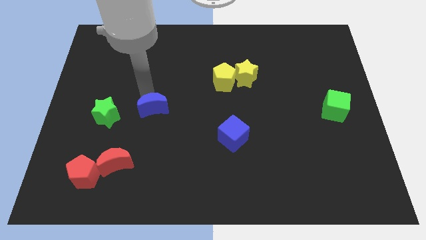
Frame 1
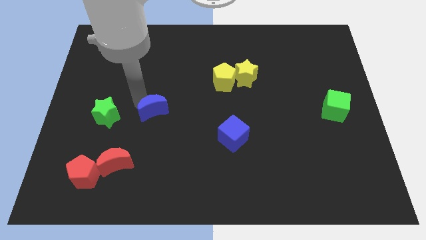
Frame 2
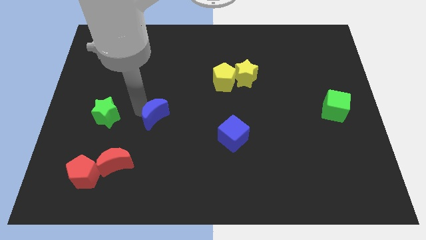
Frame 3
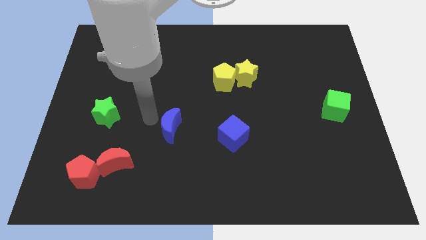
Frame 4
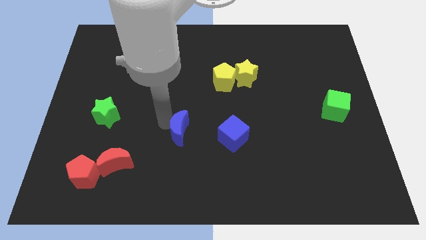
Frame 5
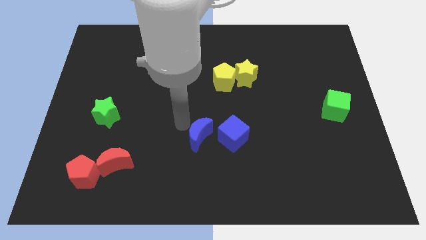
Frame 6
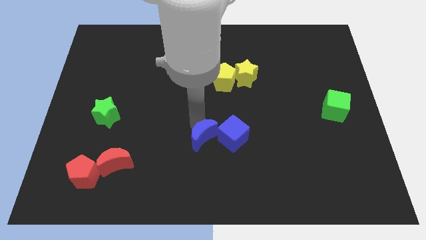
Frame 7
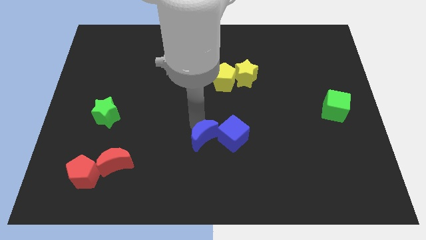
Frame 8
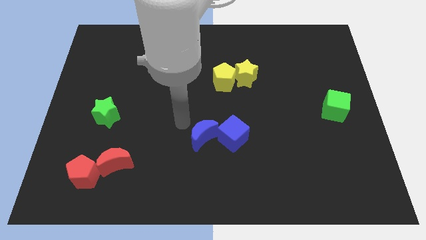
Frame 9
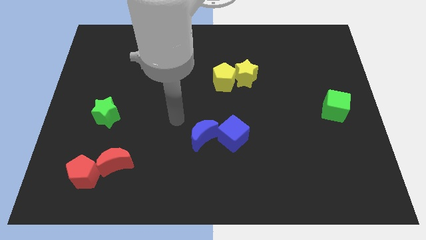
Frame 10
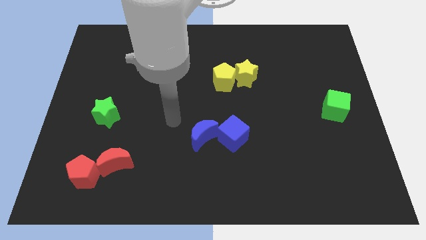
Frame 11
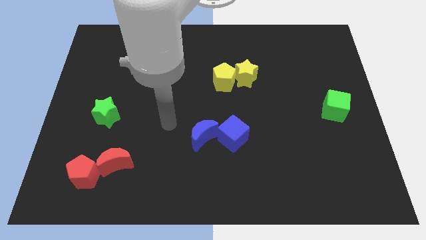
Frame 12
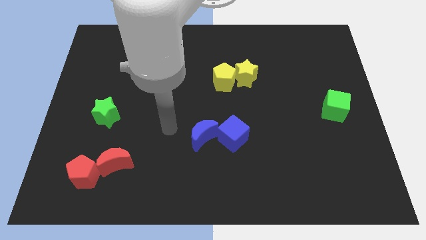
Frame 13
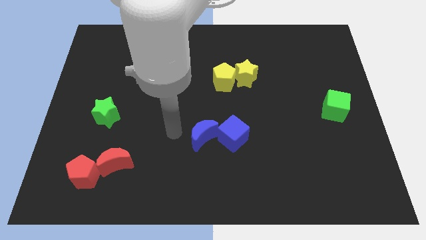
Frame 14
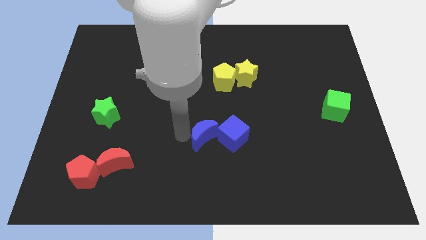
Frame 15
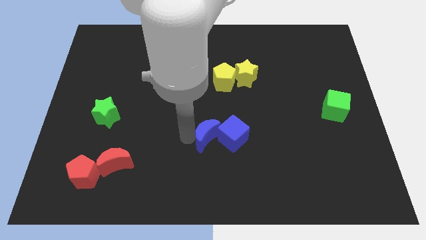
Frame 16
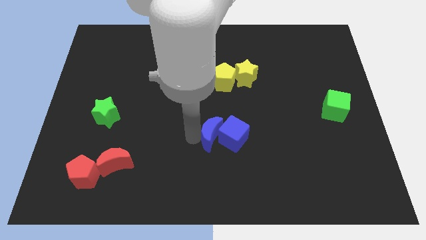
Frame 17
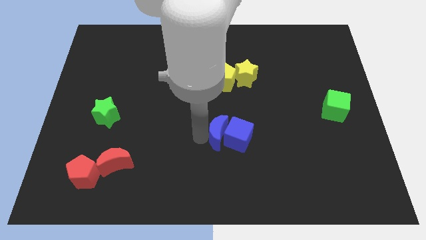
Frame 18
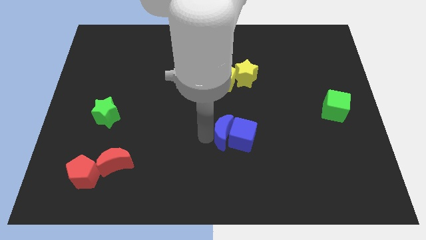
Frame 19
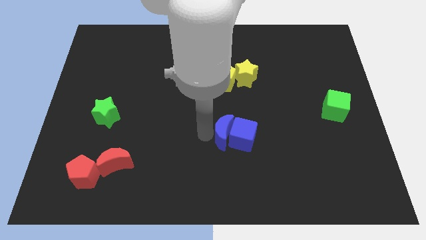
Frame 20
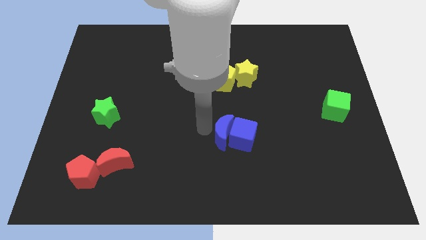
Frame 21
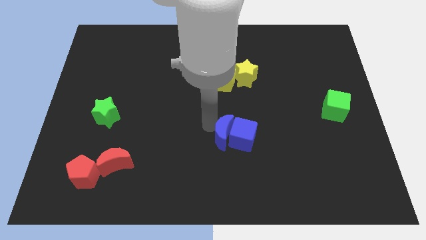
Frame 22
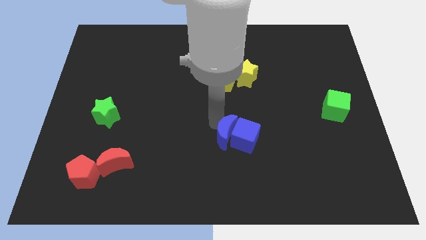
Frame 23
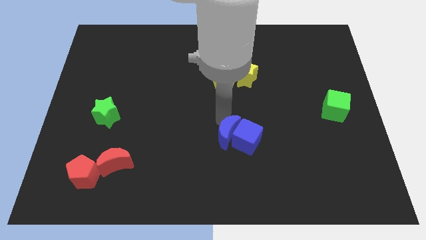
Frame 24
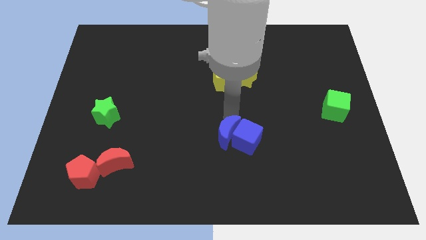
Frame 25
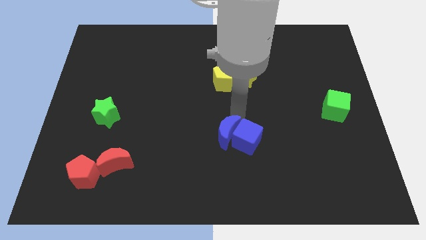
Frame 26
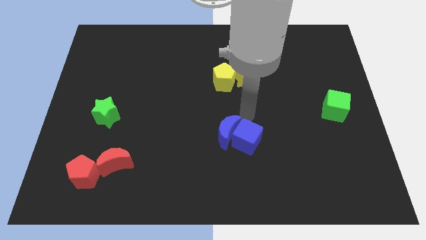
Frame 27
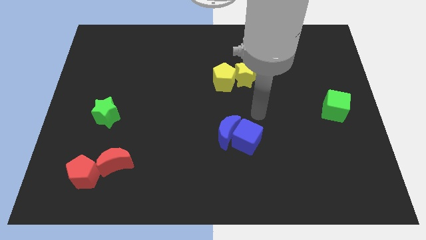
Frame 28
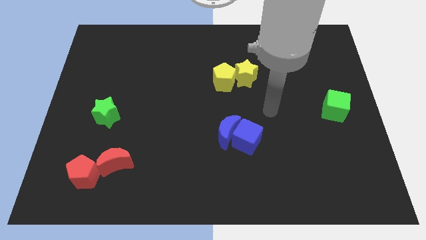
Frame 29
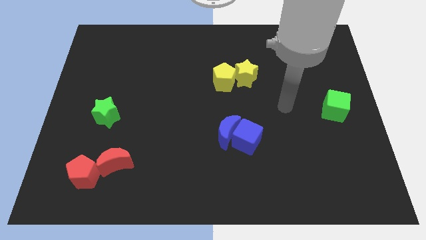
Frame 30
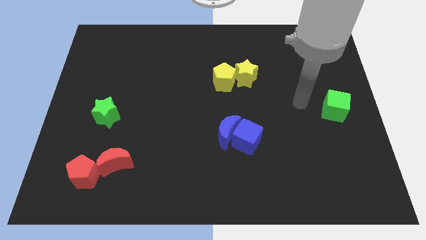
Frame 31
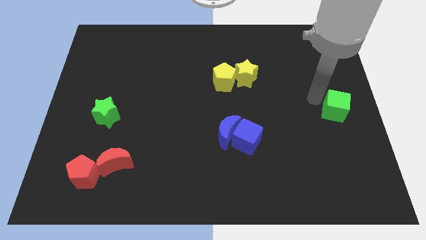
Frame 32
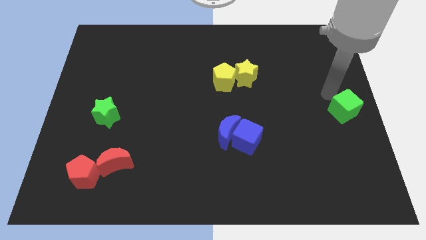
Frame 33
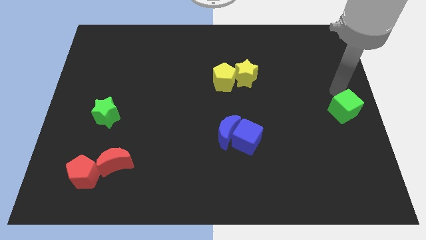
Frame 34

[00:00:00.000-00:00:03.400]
place the arm near the green cube

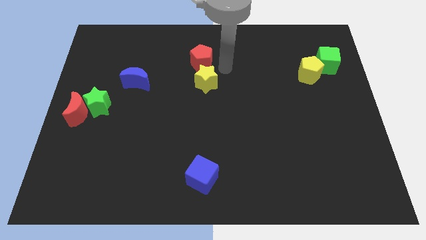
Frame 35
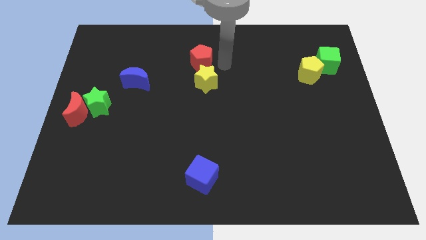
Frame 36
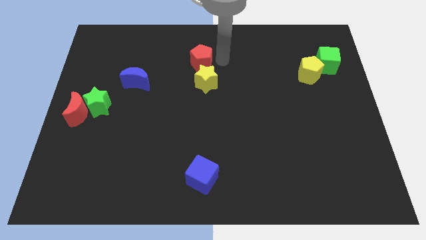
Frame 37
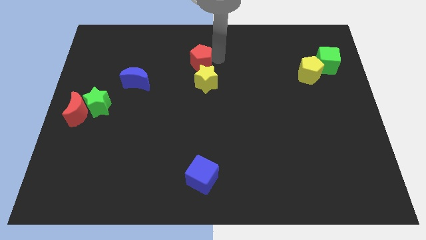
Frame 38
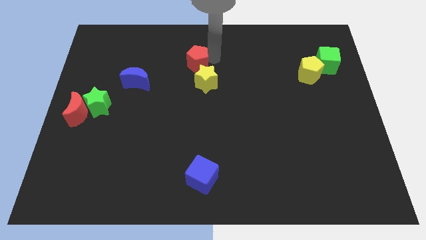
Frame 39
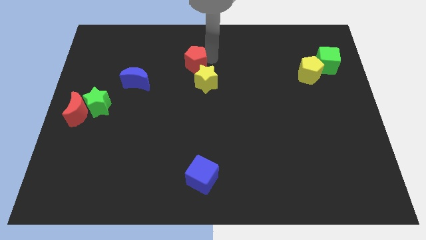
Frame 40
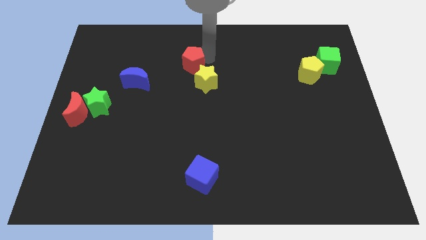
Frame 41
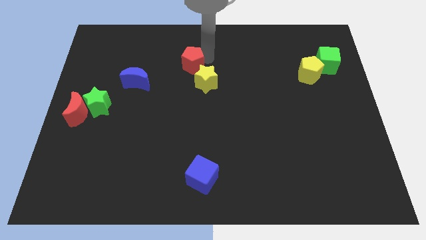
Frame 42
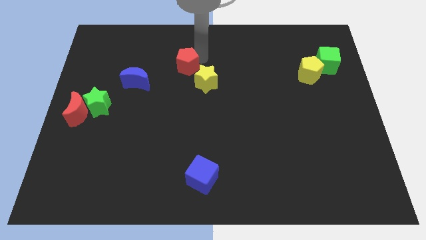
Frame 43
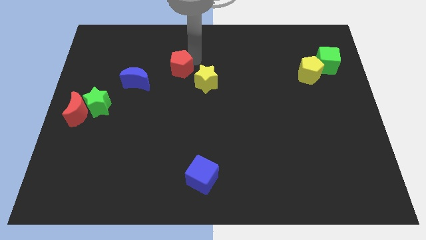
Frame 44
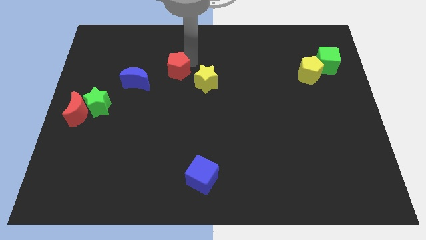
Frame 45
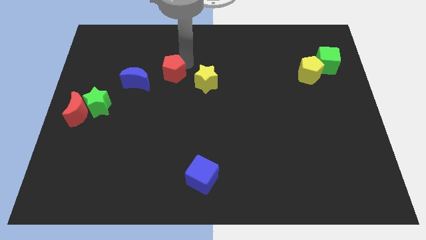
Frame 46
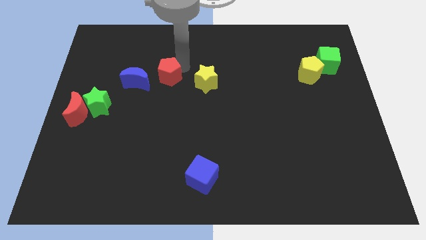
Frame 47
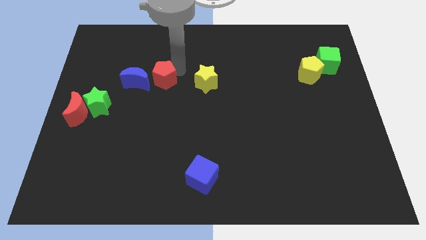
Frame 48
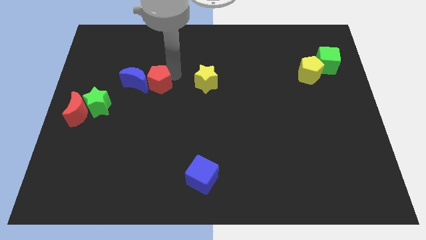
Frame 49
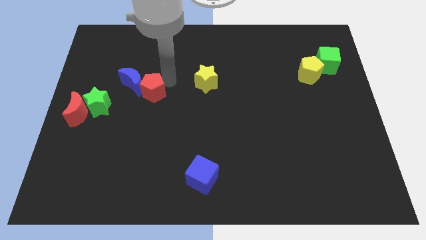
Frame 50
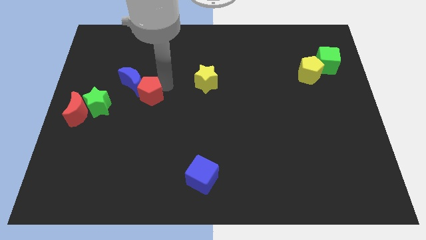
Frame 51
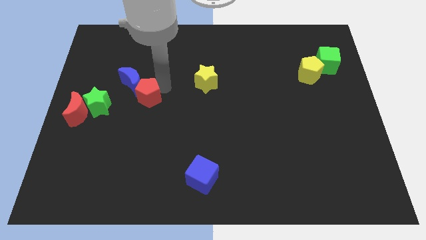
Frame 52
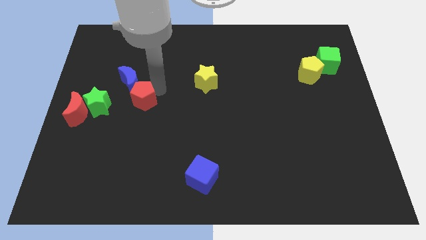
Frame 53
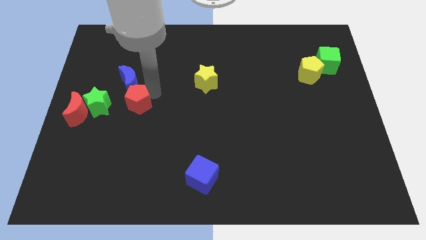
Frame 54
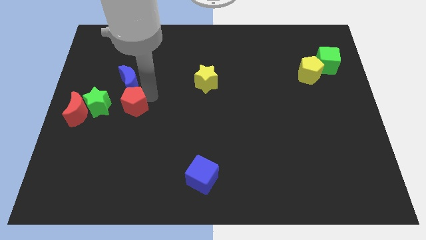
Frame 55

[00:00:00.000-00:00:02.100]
move red pentagon to the right of green star

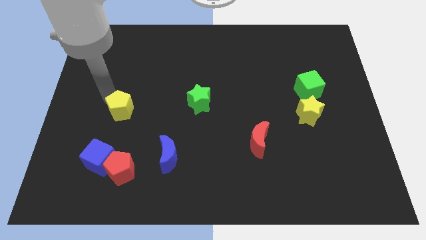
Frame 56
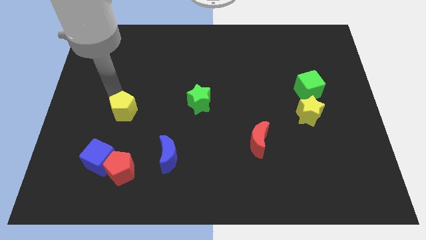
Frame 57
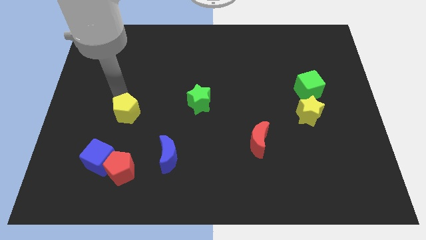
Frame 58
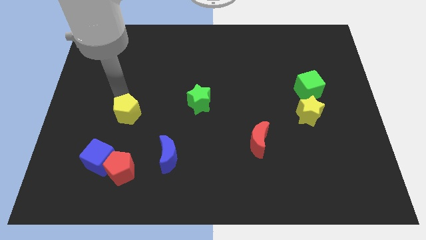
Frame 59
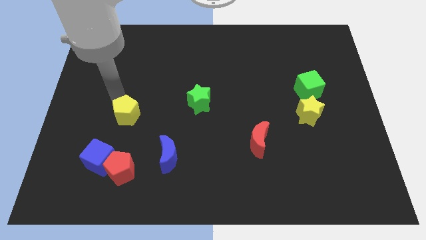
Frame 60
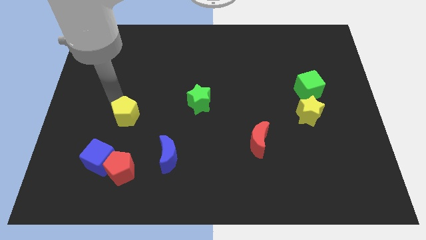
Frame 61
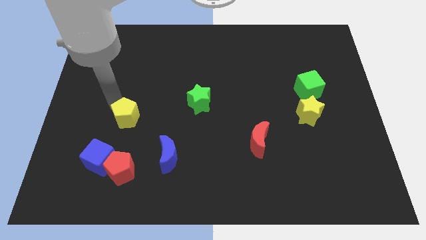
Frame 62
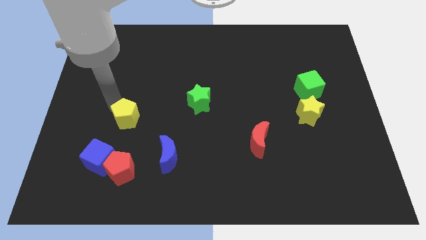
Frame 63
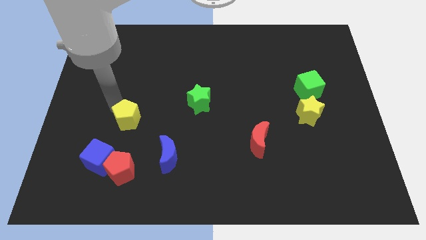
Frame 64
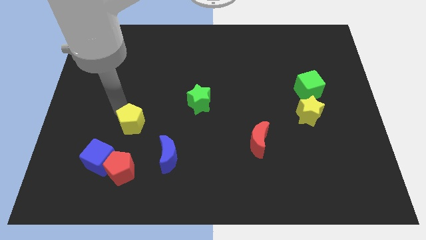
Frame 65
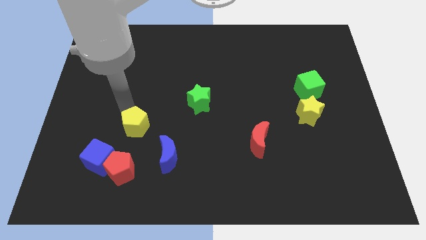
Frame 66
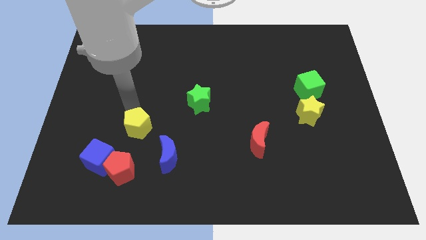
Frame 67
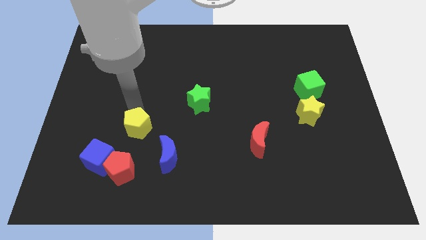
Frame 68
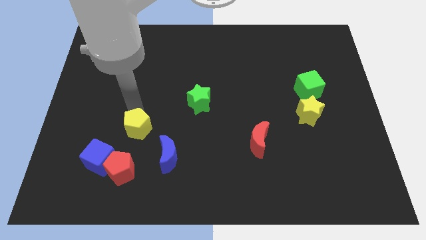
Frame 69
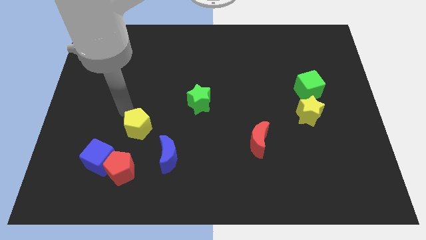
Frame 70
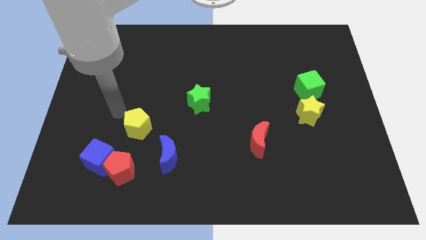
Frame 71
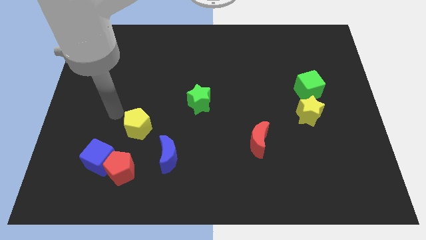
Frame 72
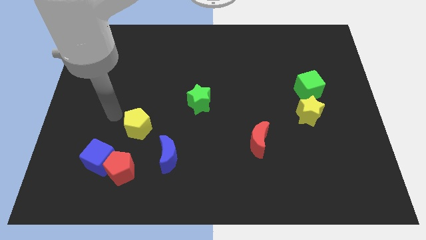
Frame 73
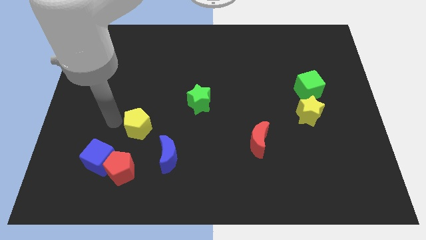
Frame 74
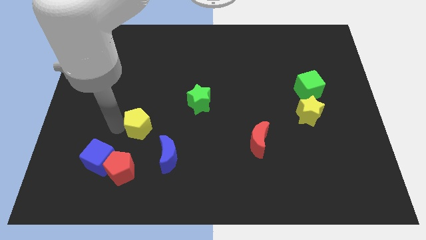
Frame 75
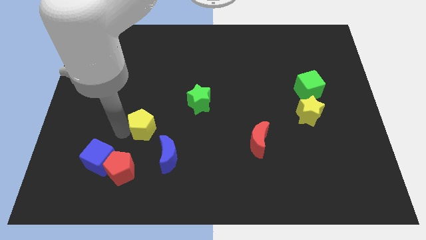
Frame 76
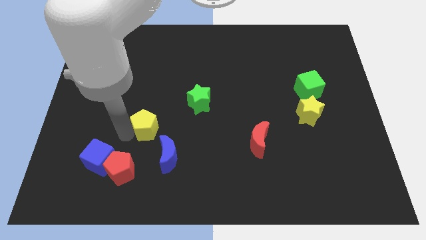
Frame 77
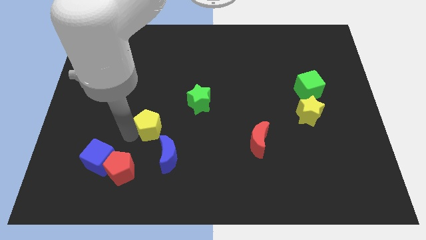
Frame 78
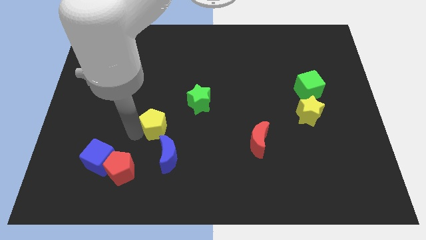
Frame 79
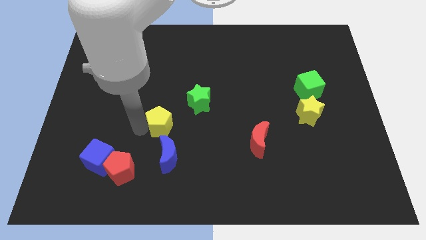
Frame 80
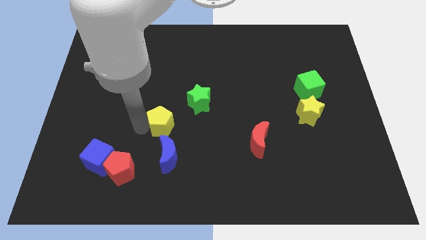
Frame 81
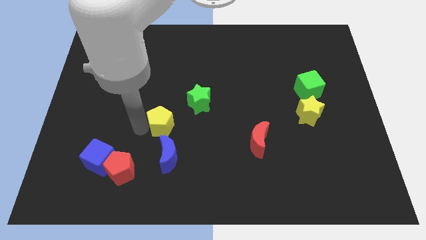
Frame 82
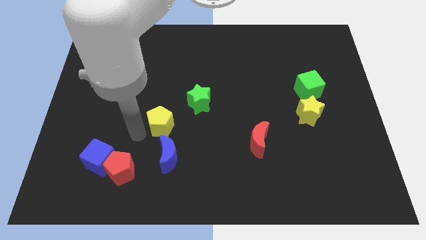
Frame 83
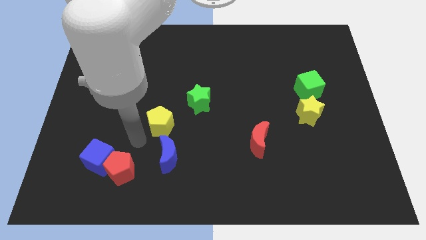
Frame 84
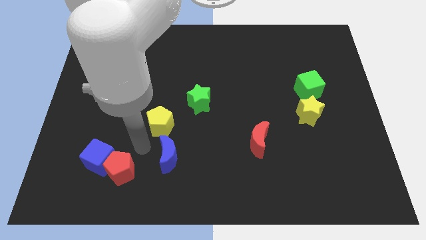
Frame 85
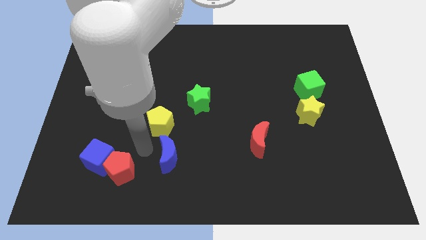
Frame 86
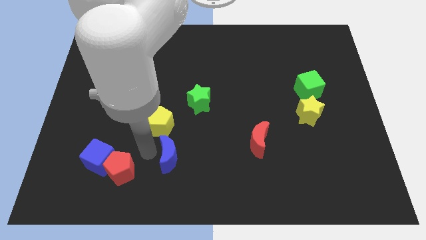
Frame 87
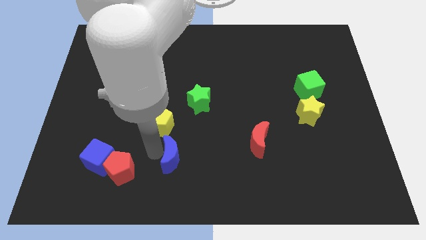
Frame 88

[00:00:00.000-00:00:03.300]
place the yellow pentagon diagonally in between the green star and blue cube

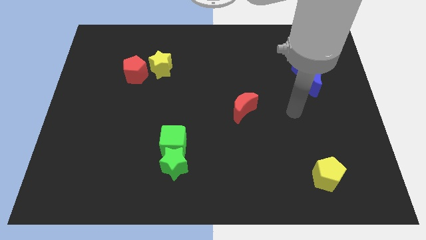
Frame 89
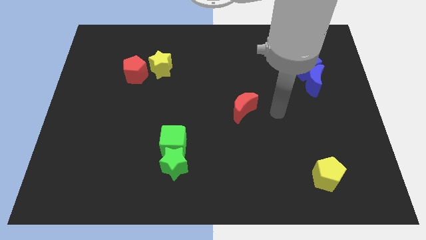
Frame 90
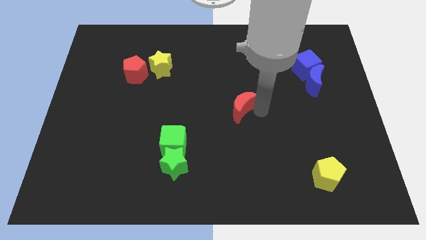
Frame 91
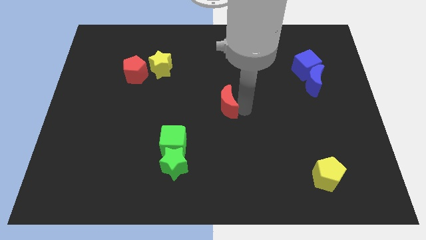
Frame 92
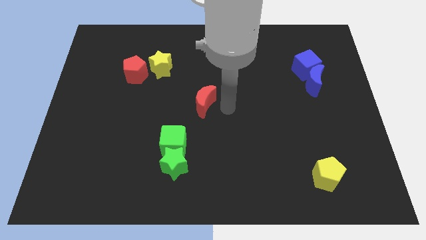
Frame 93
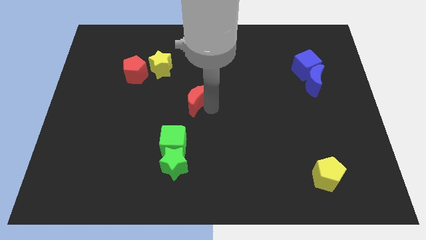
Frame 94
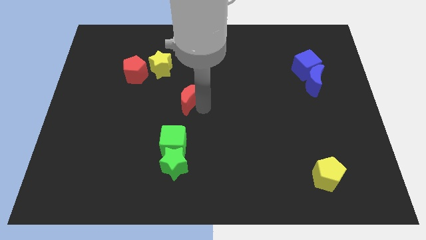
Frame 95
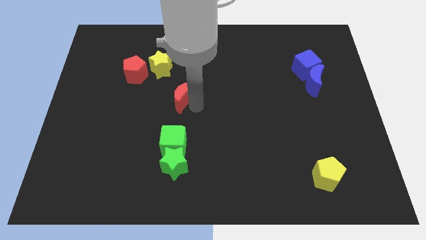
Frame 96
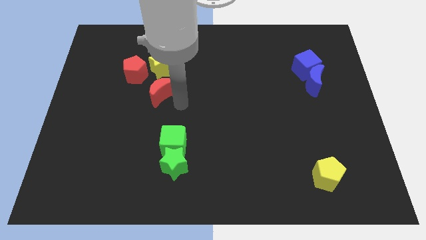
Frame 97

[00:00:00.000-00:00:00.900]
move the red crescent below the yellow star
